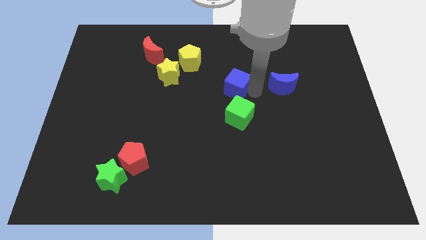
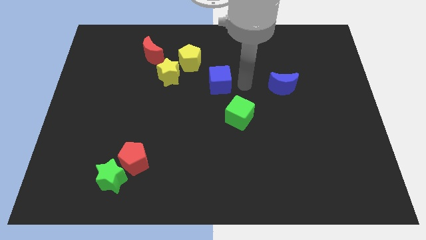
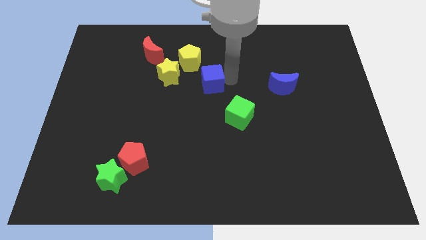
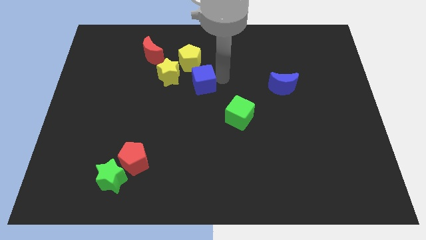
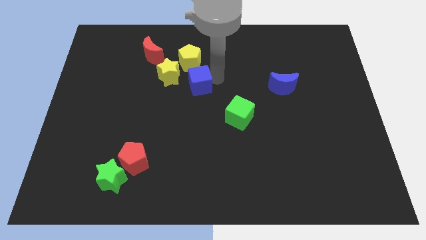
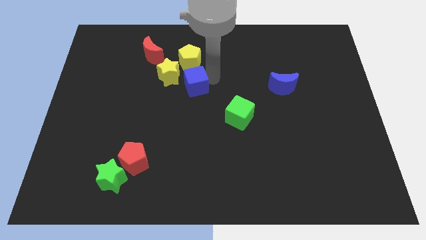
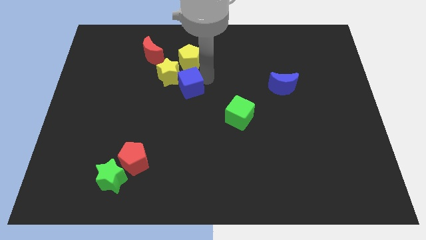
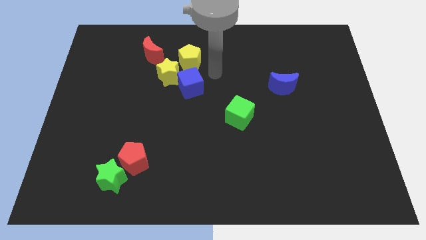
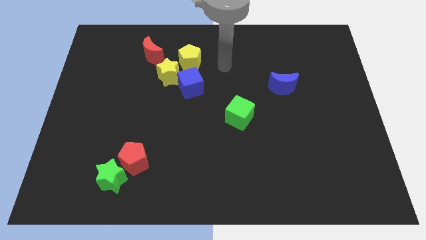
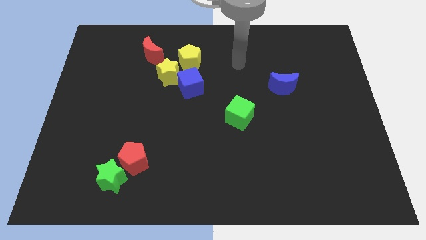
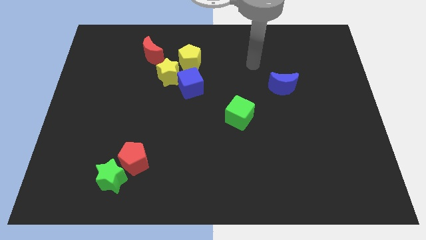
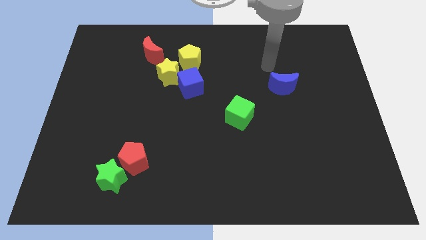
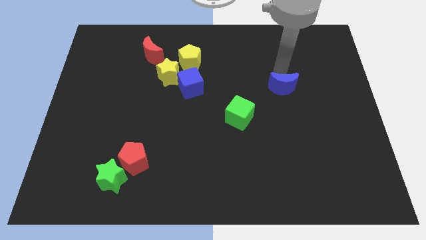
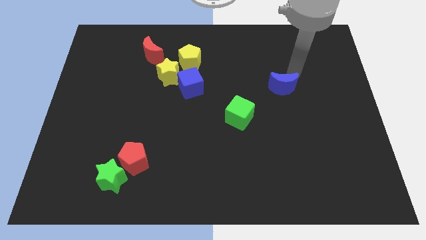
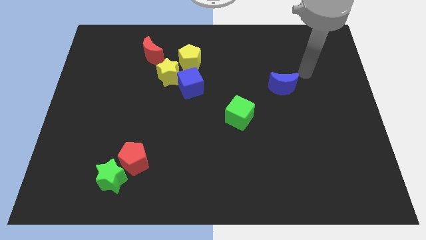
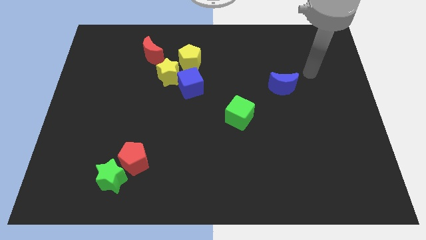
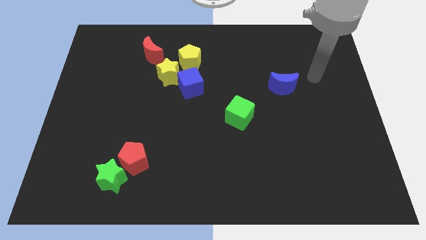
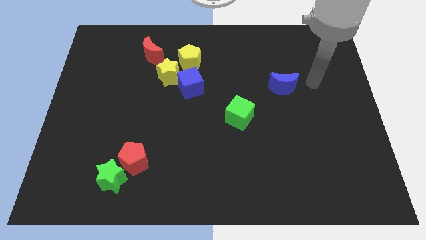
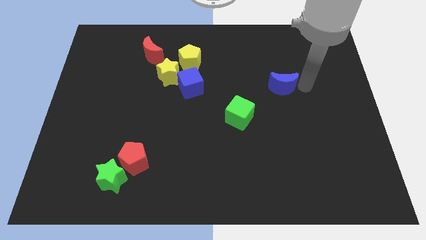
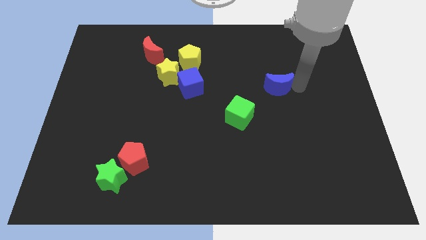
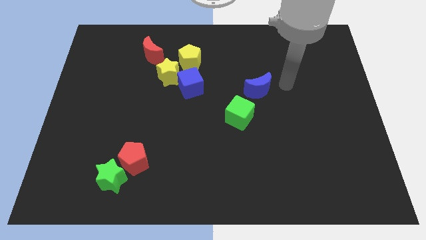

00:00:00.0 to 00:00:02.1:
move blue moon above green cube

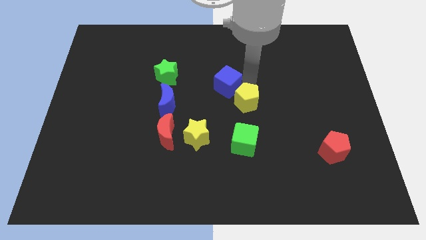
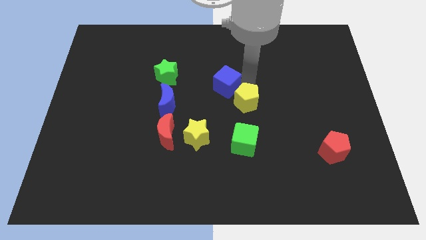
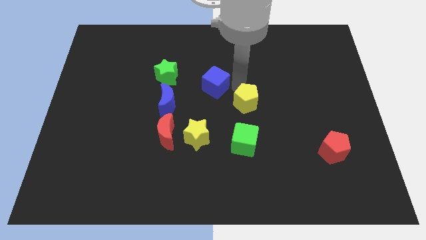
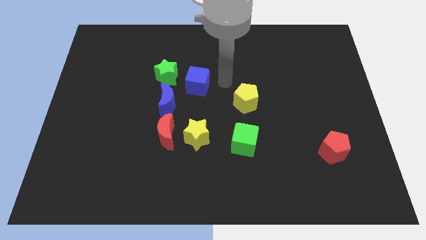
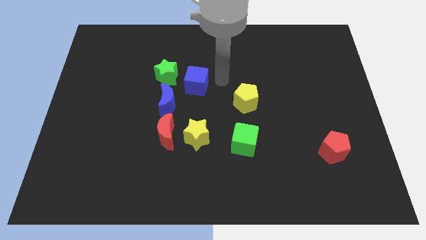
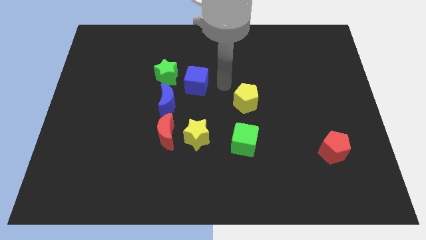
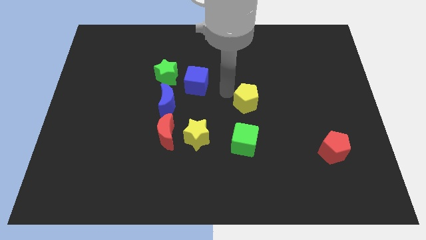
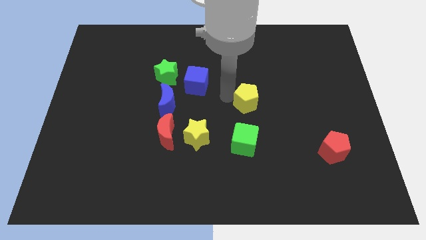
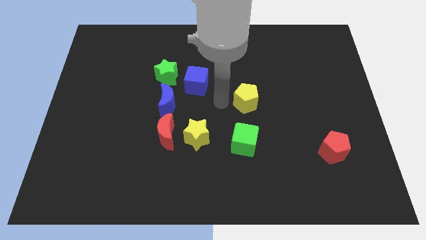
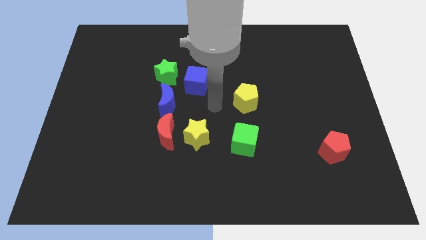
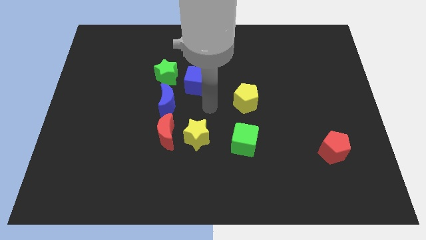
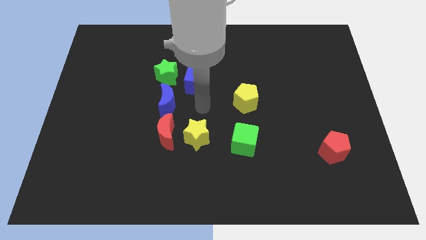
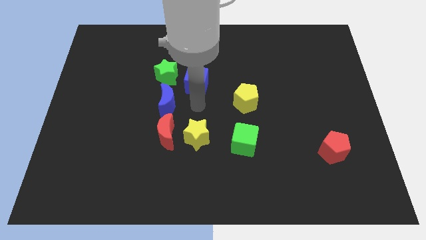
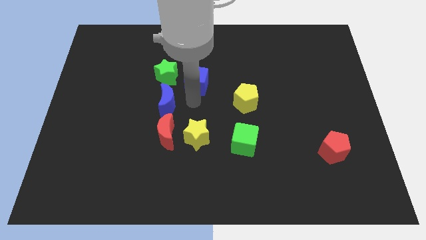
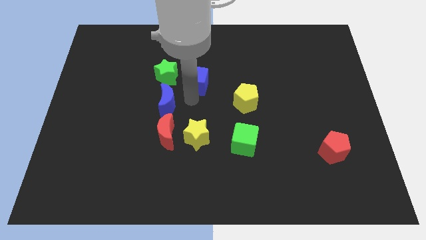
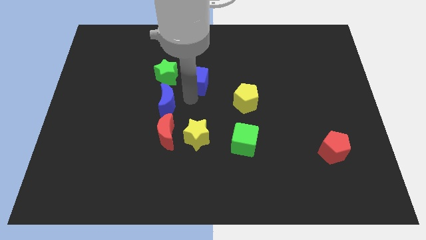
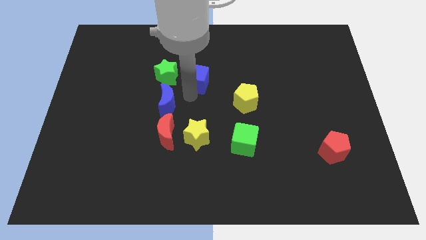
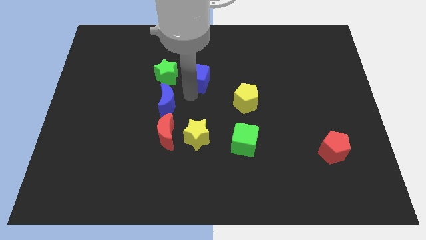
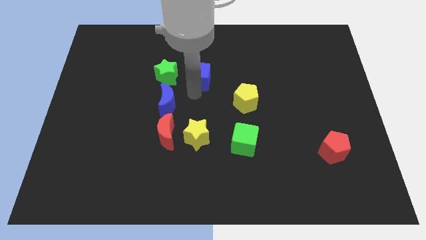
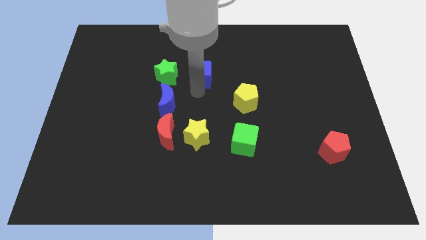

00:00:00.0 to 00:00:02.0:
place the blue cube parallel to the green star

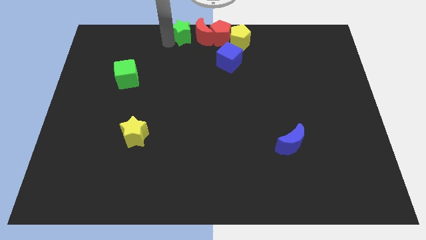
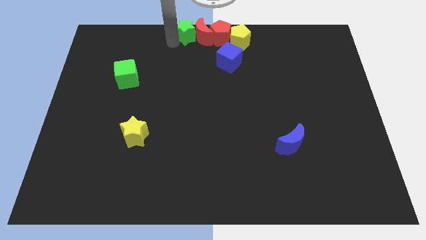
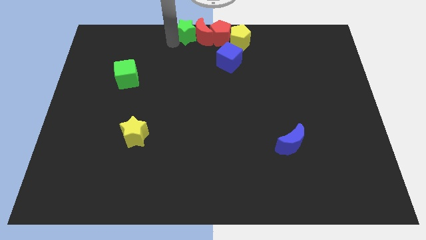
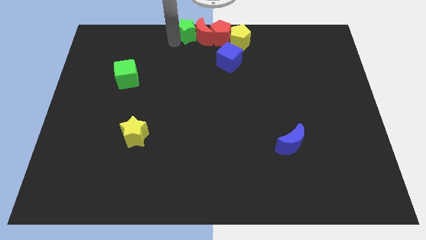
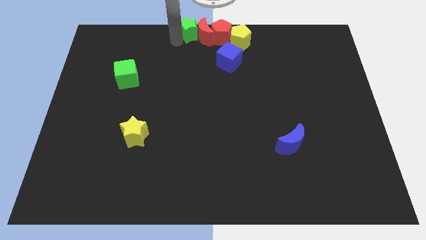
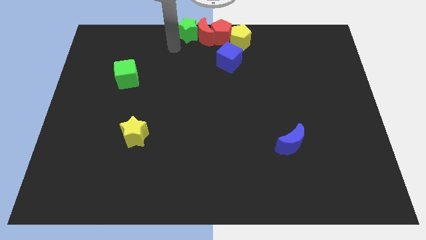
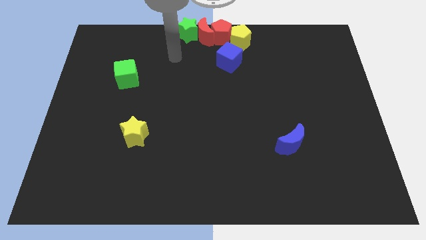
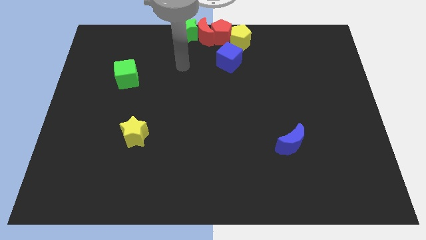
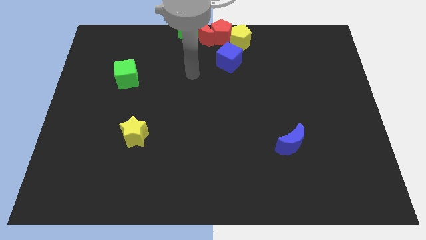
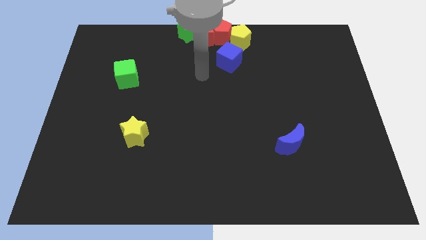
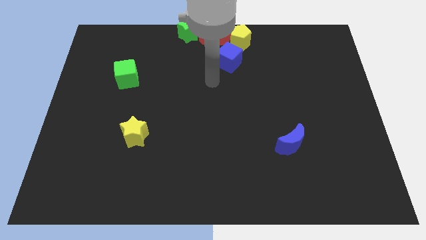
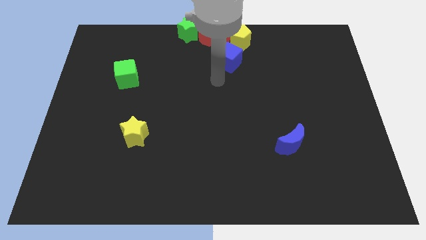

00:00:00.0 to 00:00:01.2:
push the green star into the red moon

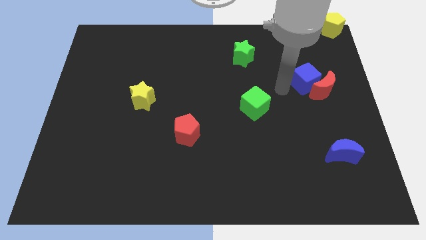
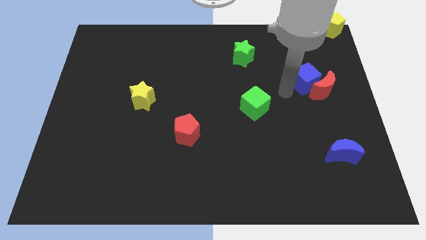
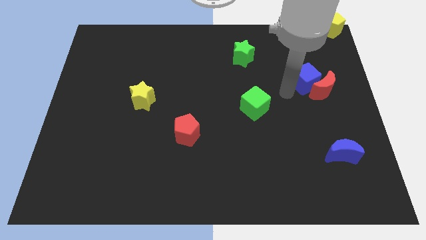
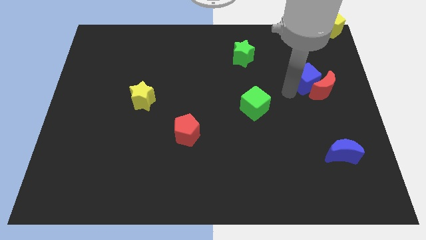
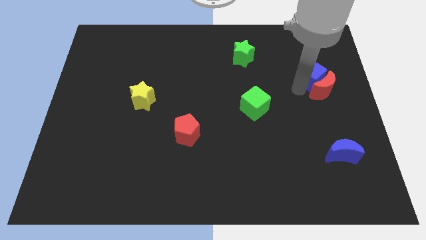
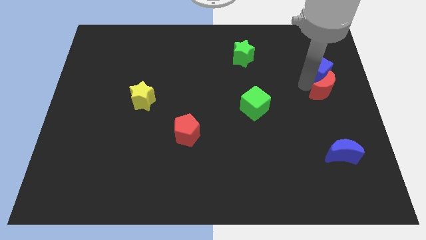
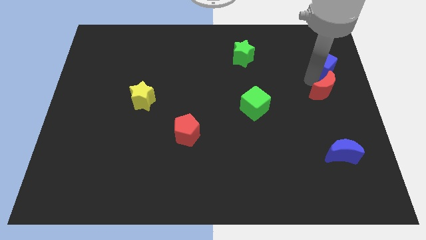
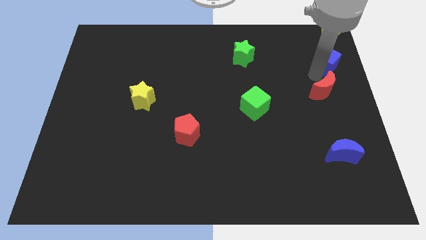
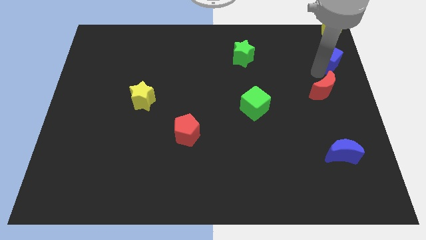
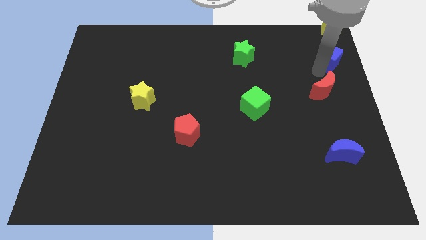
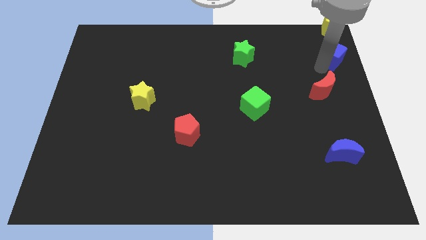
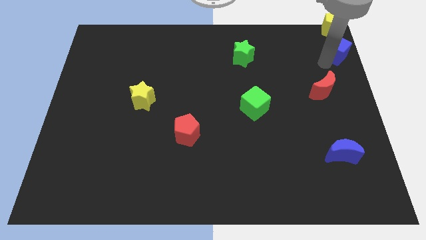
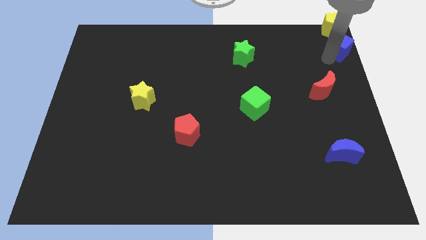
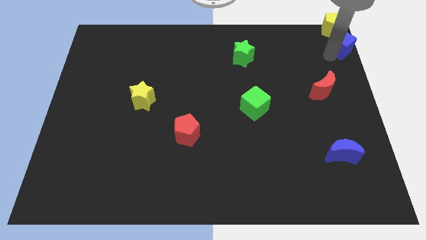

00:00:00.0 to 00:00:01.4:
separate the blue cube away from the red crescent

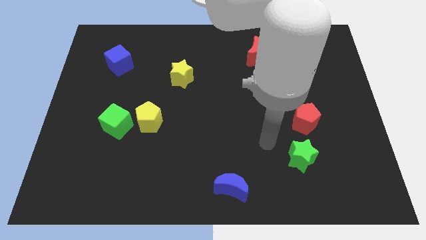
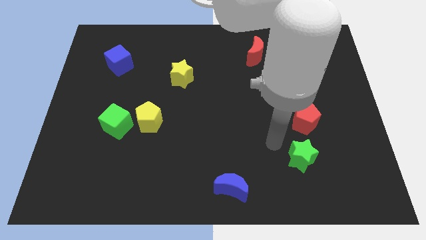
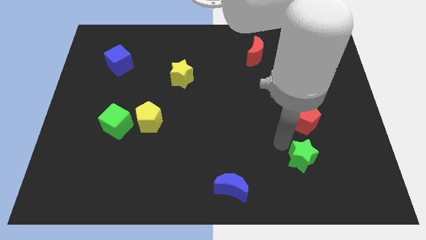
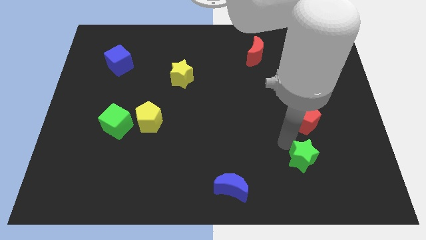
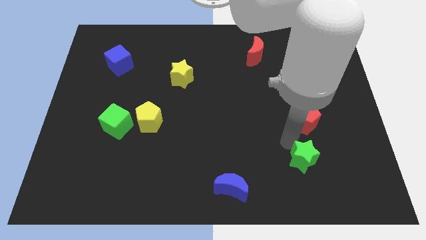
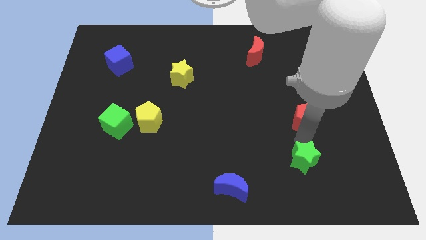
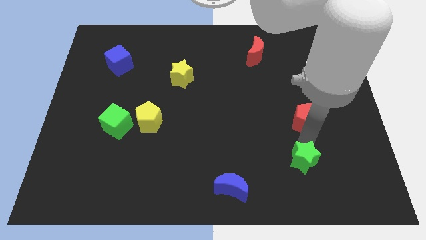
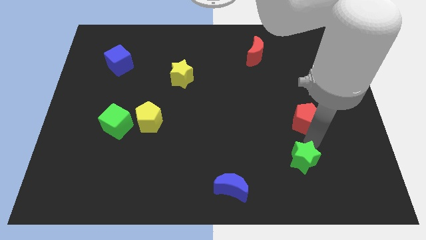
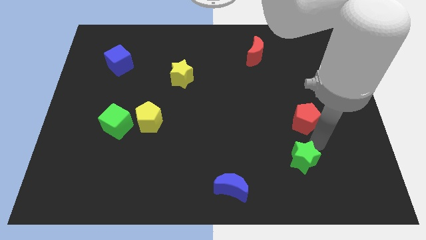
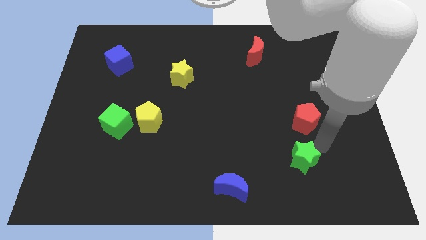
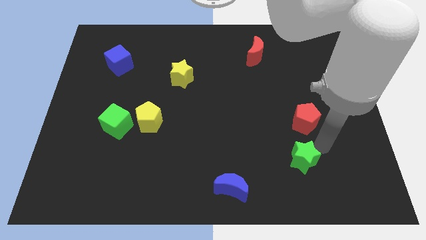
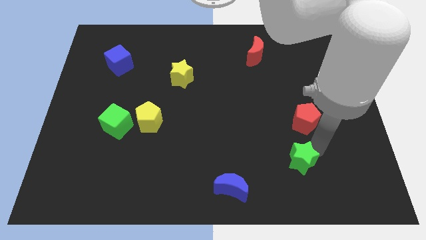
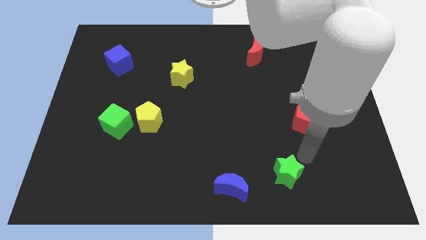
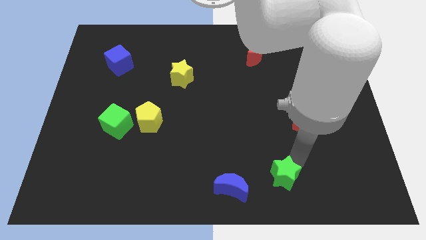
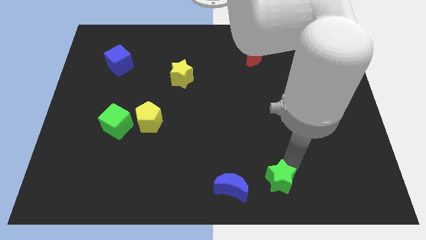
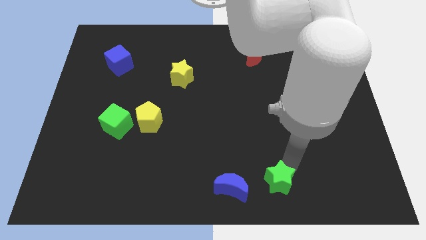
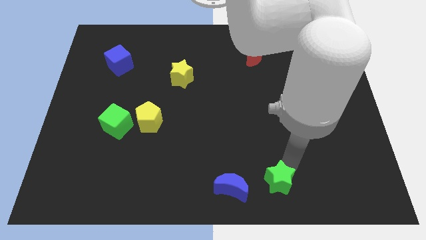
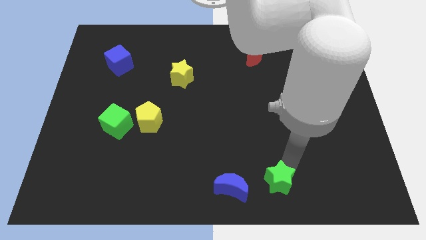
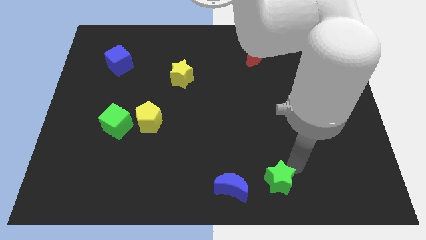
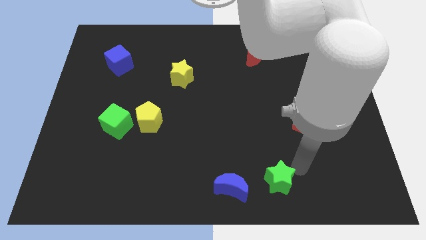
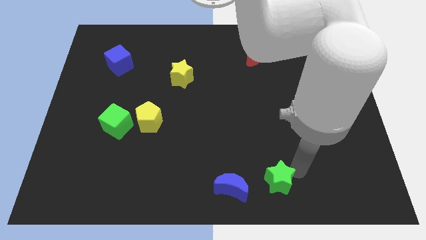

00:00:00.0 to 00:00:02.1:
move the green star to the left bottom

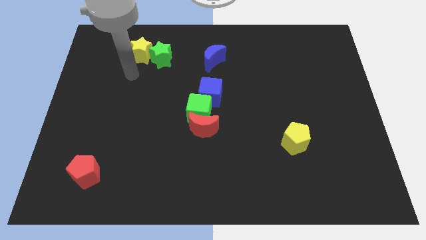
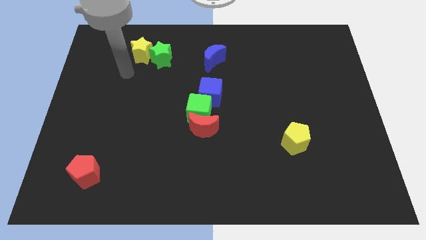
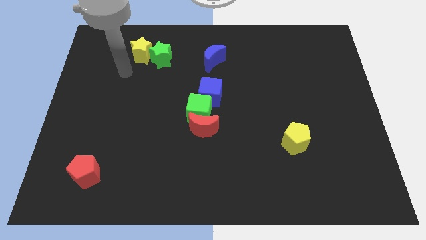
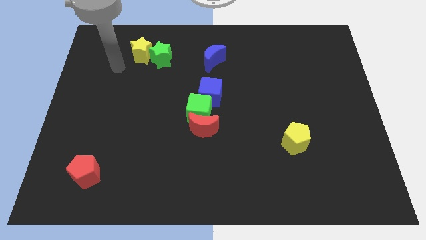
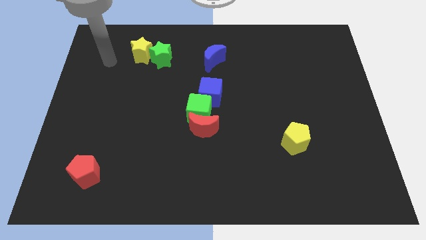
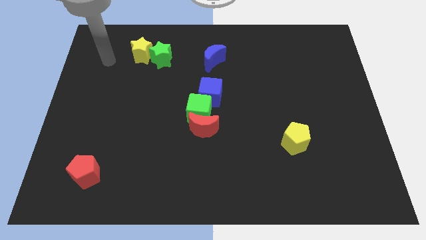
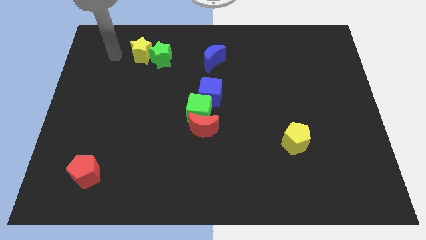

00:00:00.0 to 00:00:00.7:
move your hand to the left of the yellow star
